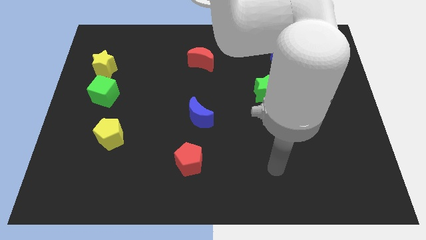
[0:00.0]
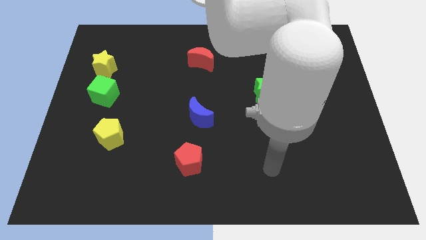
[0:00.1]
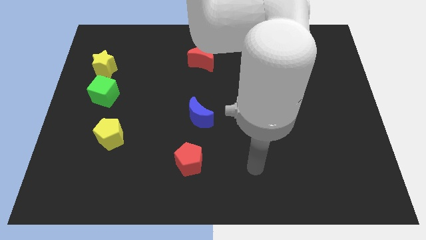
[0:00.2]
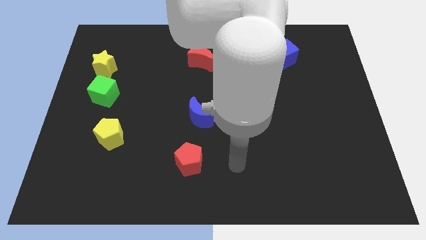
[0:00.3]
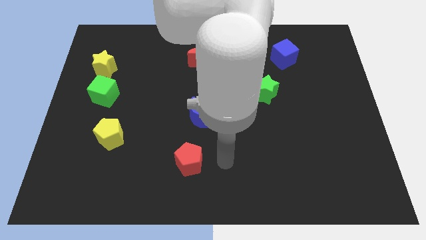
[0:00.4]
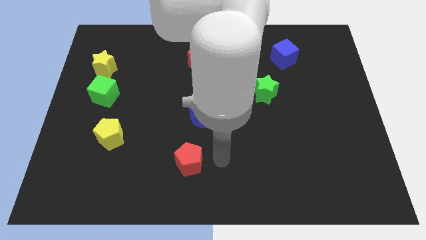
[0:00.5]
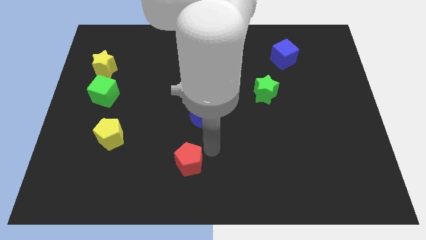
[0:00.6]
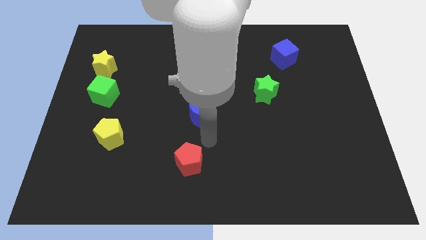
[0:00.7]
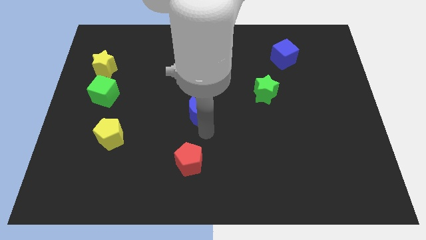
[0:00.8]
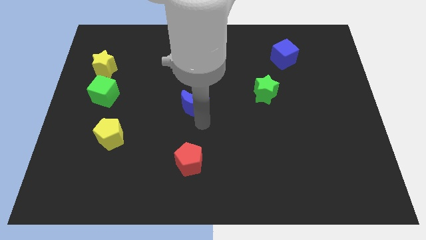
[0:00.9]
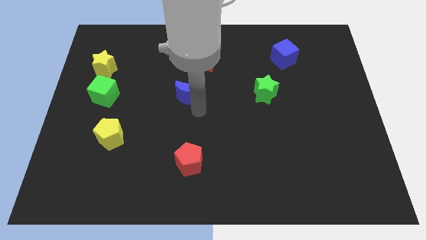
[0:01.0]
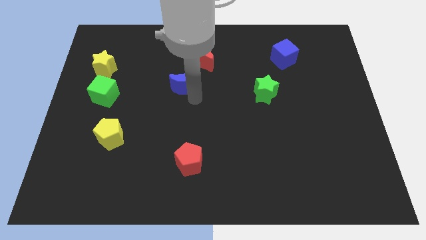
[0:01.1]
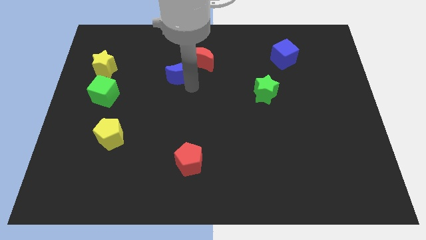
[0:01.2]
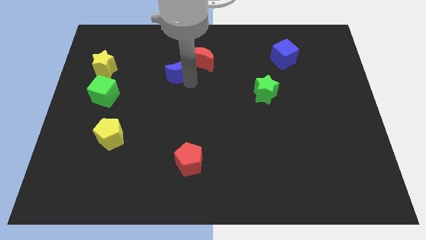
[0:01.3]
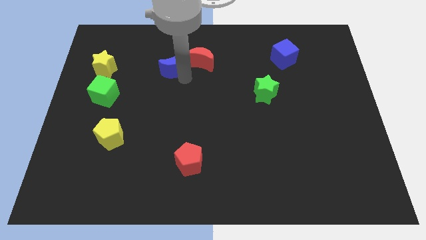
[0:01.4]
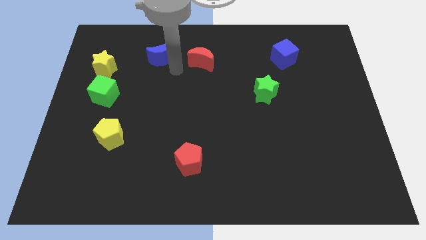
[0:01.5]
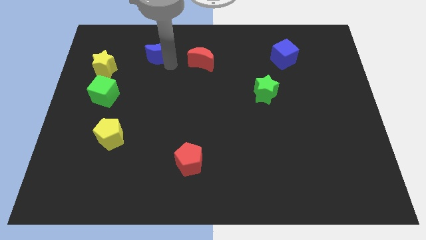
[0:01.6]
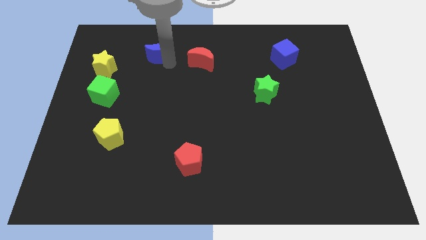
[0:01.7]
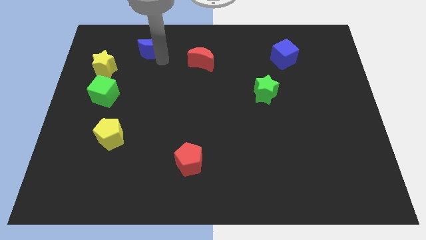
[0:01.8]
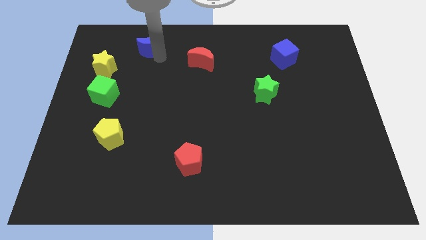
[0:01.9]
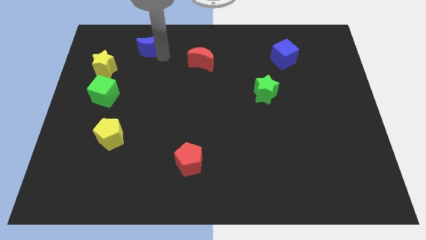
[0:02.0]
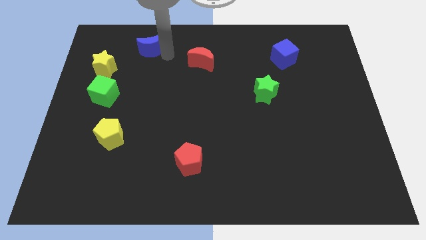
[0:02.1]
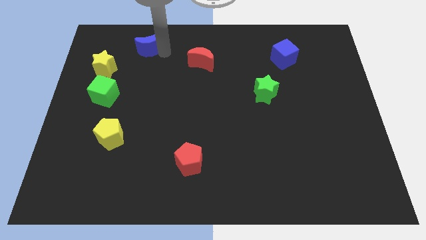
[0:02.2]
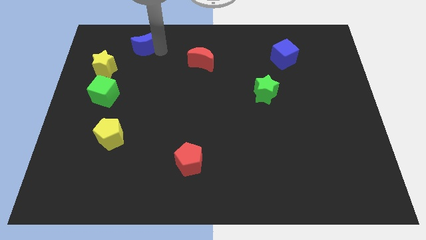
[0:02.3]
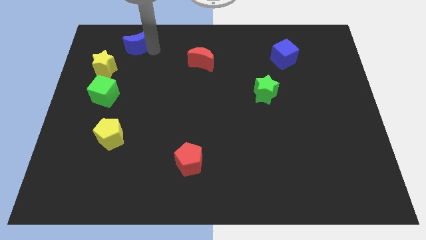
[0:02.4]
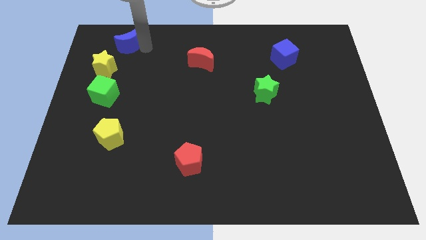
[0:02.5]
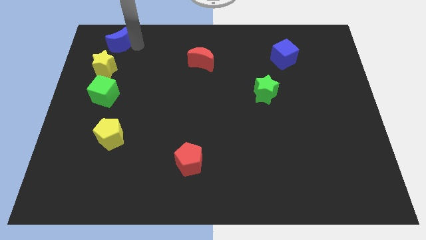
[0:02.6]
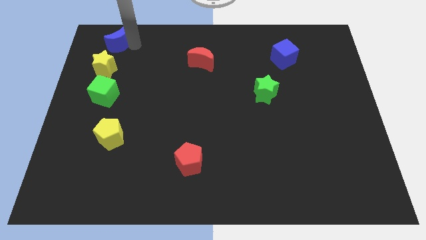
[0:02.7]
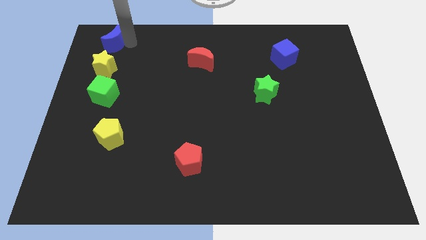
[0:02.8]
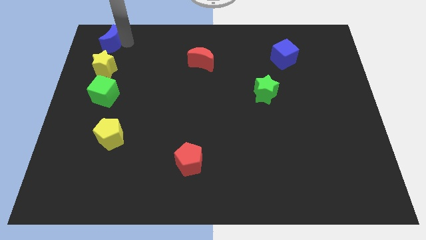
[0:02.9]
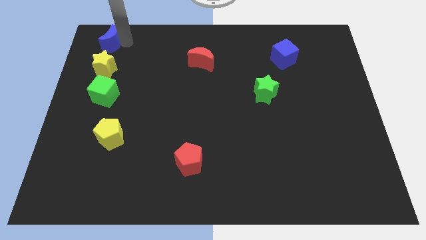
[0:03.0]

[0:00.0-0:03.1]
move blue moon away from the center

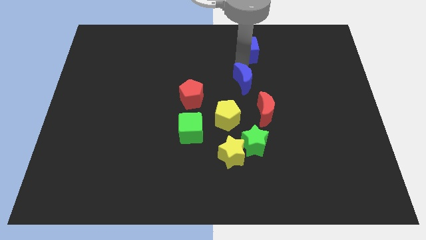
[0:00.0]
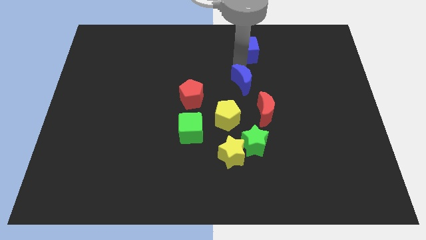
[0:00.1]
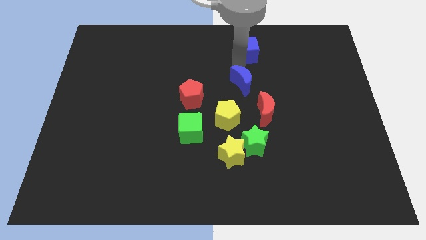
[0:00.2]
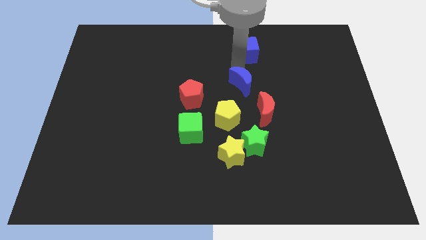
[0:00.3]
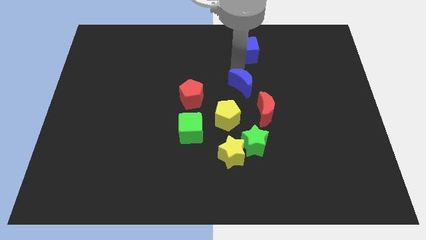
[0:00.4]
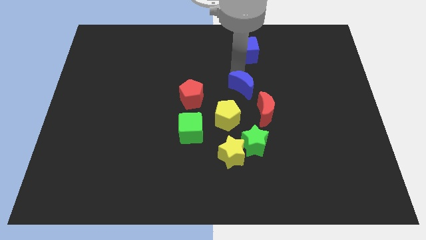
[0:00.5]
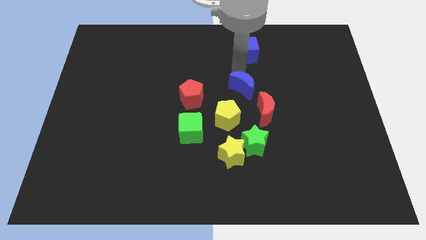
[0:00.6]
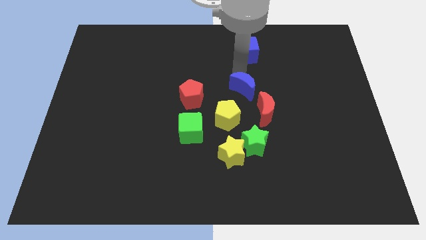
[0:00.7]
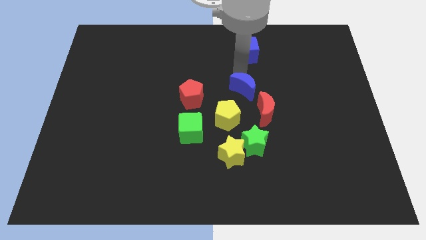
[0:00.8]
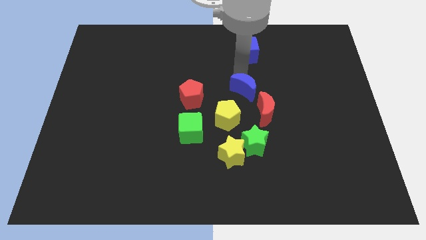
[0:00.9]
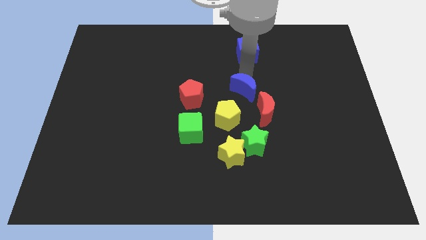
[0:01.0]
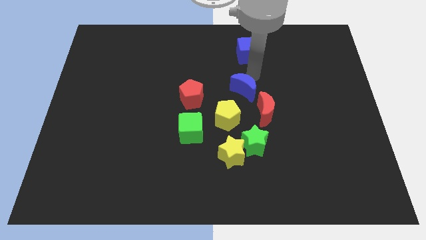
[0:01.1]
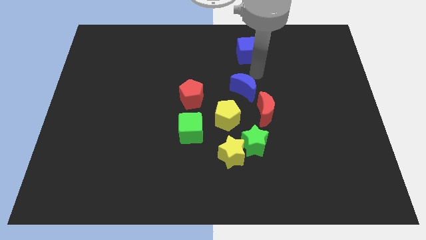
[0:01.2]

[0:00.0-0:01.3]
separate blue crescent from blue cube

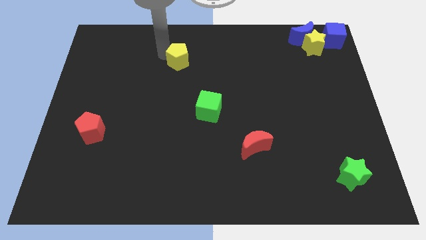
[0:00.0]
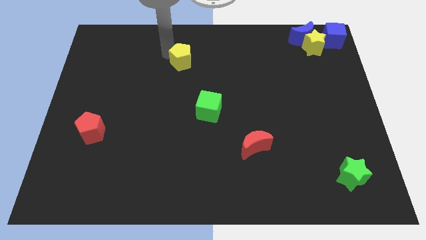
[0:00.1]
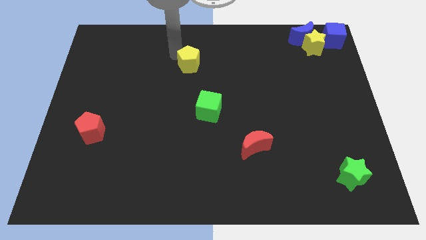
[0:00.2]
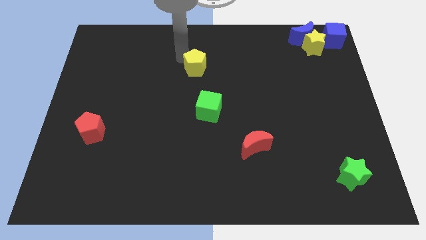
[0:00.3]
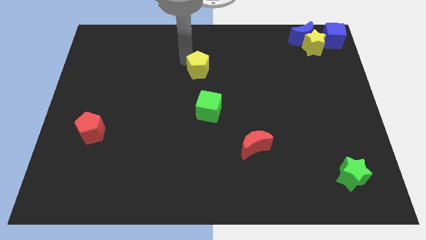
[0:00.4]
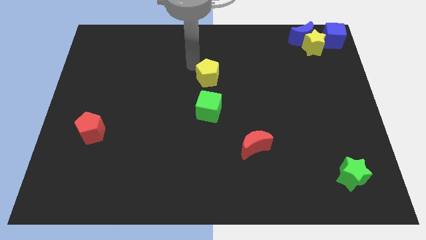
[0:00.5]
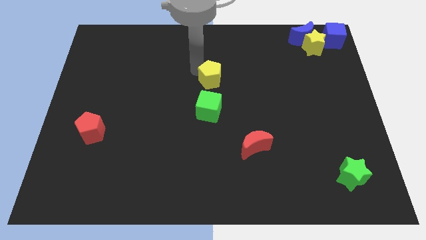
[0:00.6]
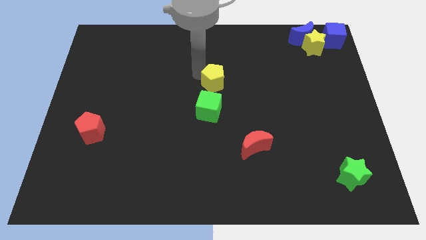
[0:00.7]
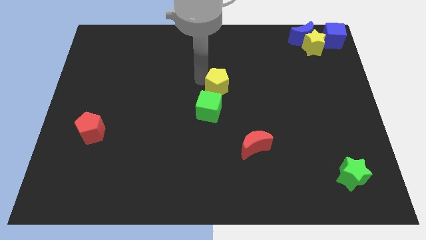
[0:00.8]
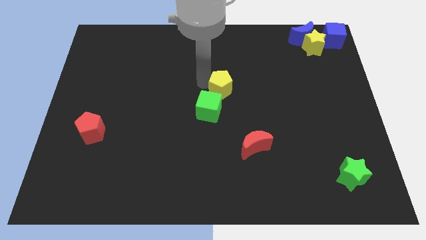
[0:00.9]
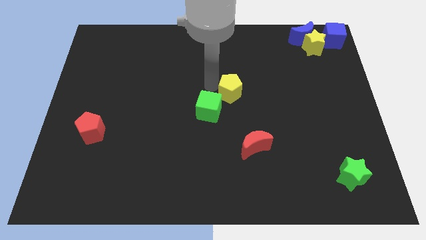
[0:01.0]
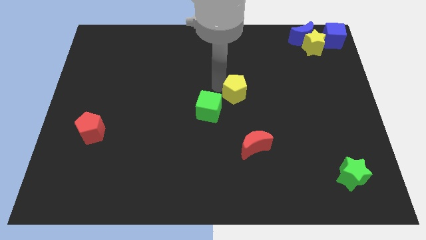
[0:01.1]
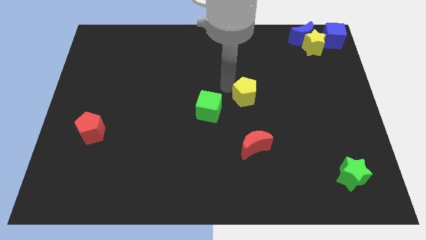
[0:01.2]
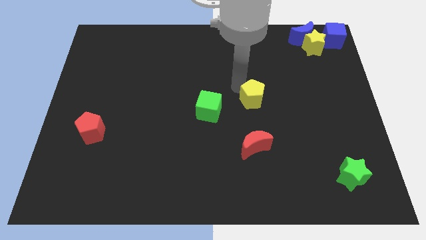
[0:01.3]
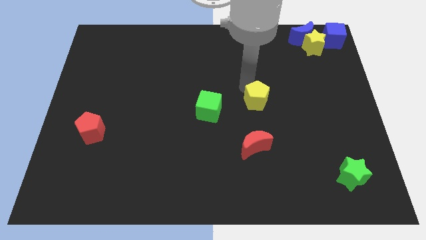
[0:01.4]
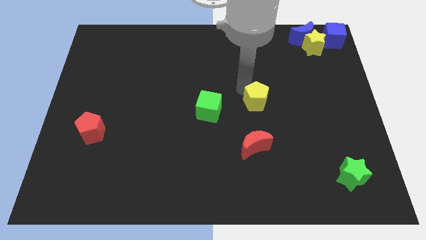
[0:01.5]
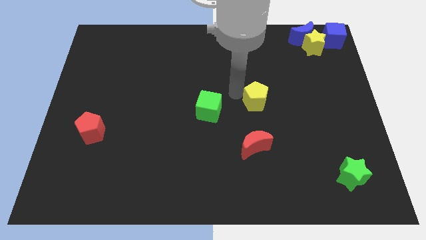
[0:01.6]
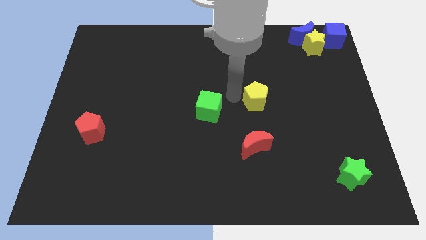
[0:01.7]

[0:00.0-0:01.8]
move the yellow pentagon vertically to the top of the red crescent

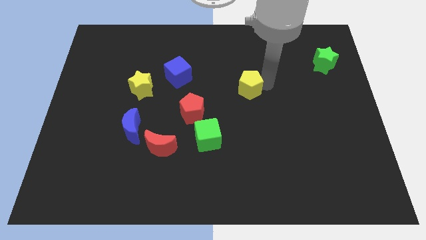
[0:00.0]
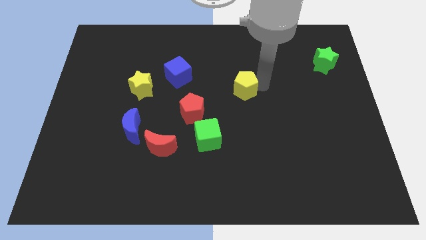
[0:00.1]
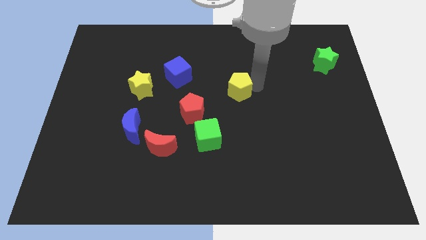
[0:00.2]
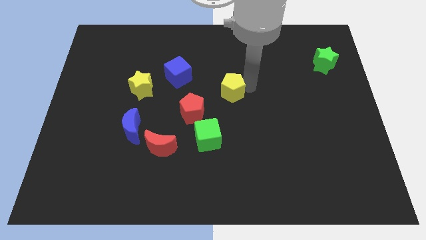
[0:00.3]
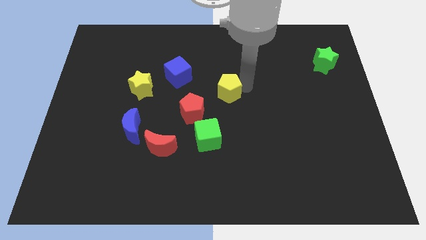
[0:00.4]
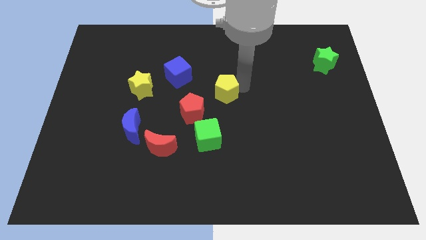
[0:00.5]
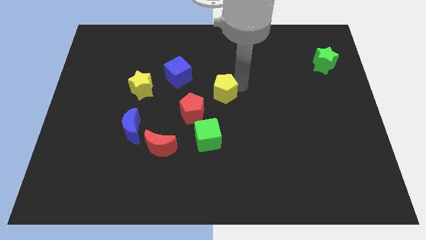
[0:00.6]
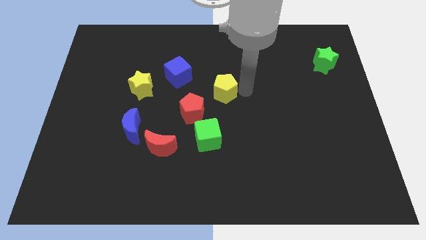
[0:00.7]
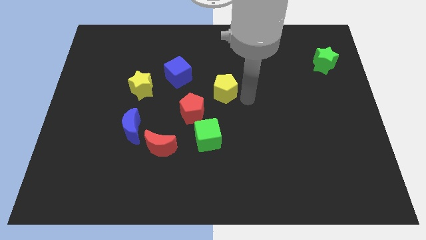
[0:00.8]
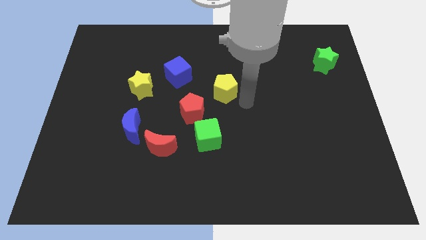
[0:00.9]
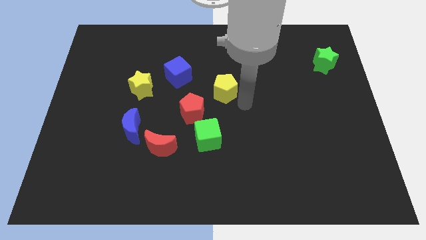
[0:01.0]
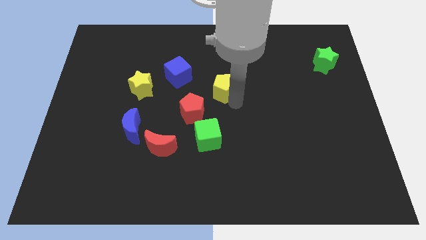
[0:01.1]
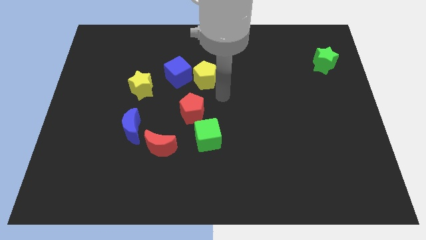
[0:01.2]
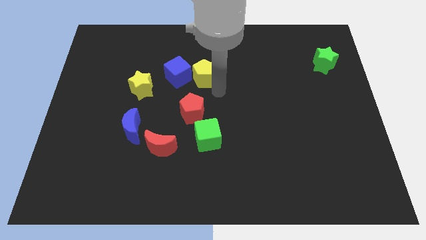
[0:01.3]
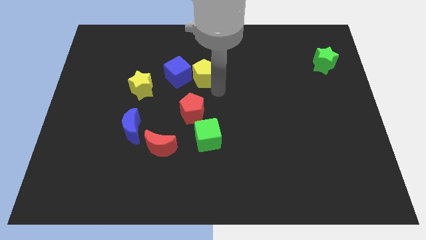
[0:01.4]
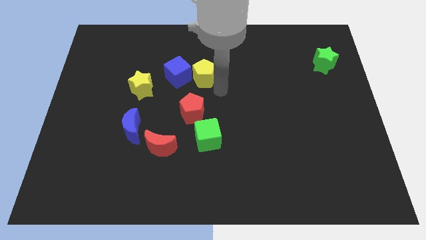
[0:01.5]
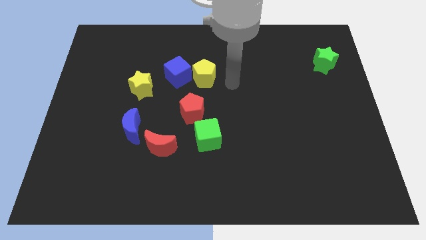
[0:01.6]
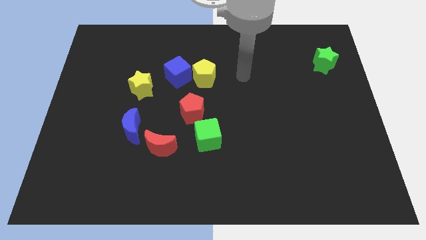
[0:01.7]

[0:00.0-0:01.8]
move the yellow pentagon to the right side of the blue cube

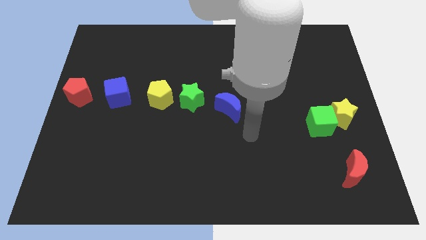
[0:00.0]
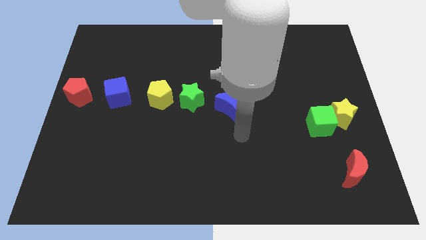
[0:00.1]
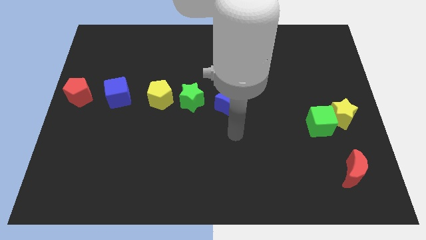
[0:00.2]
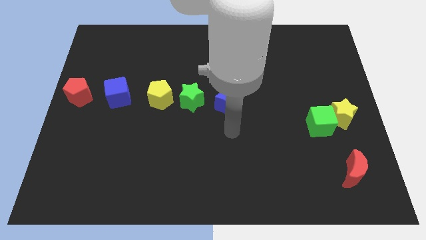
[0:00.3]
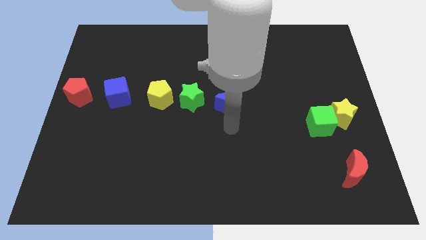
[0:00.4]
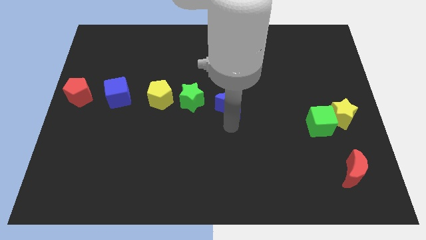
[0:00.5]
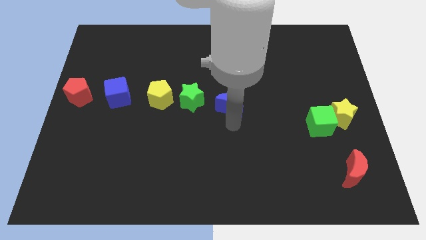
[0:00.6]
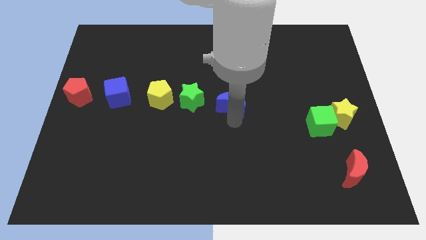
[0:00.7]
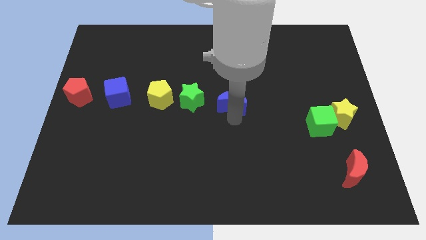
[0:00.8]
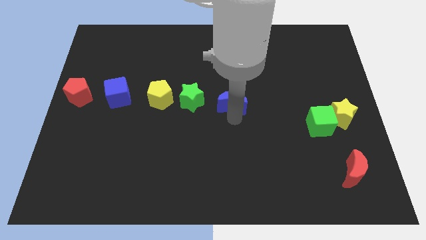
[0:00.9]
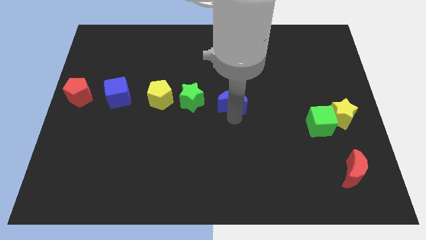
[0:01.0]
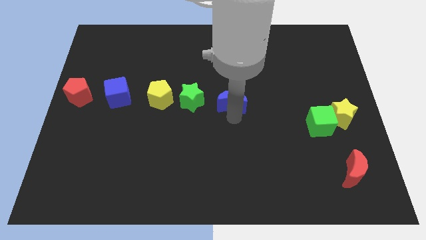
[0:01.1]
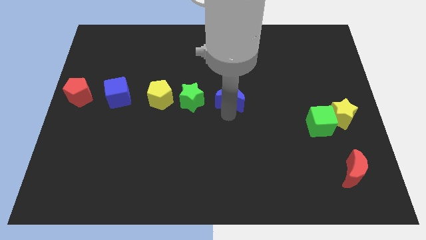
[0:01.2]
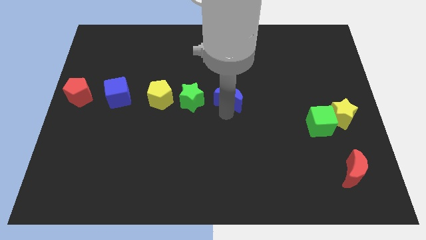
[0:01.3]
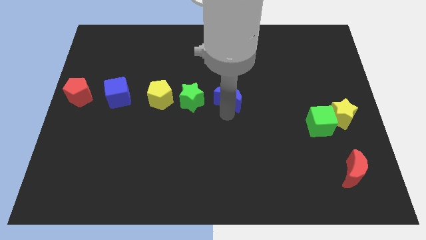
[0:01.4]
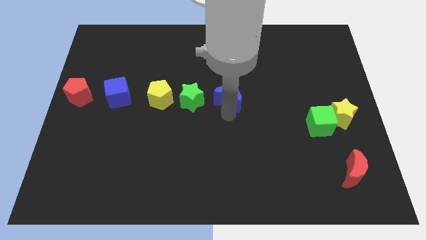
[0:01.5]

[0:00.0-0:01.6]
move the blue moon to the center
